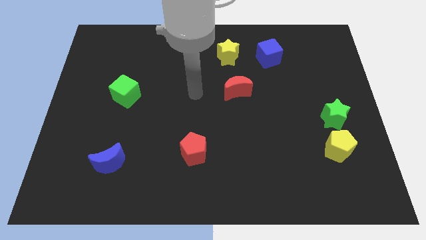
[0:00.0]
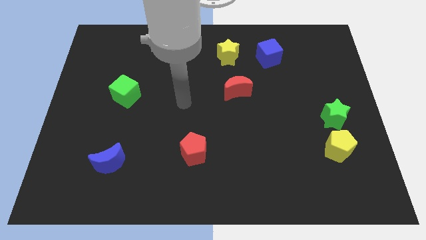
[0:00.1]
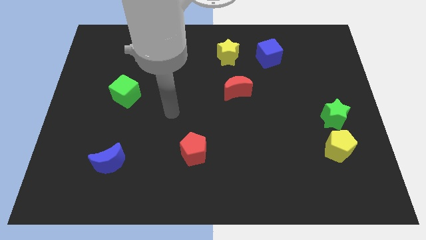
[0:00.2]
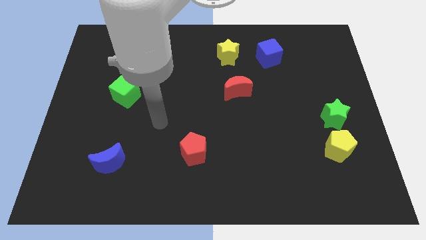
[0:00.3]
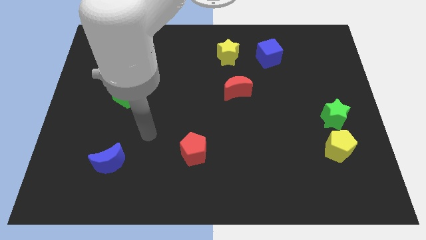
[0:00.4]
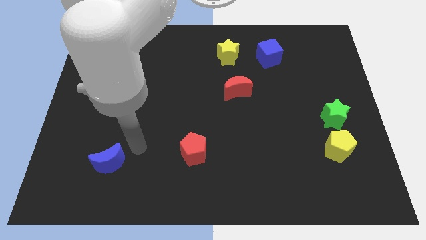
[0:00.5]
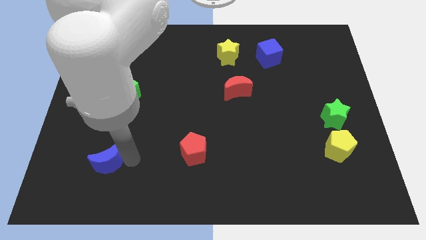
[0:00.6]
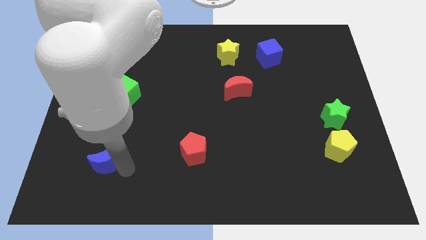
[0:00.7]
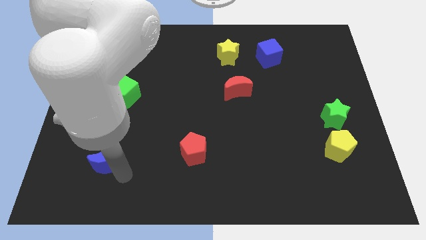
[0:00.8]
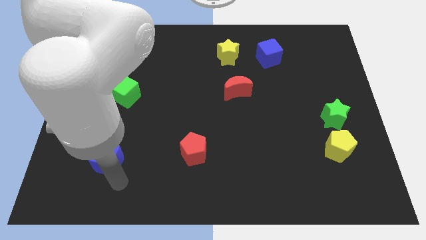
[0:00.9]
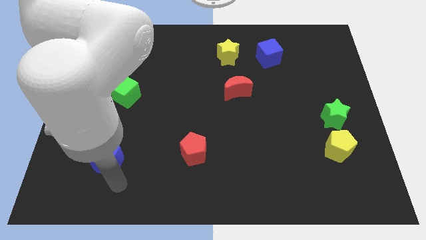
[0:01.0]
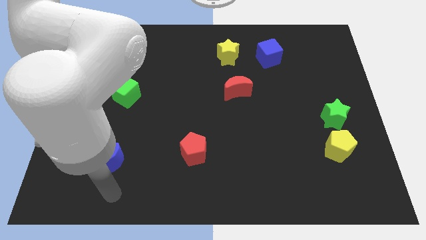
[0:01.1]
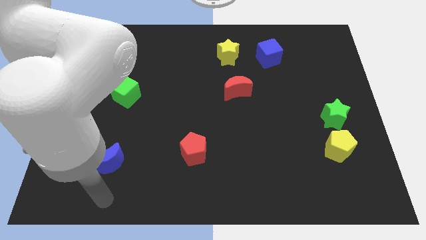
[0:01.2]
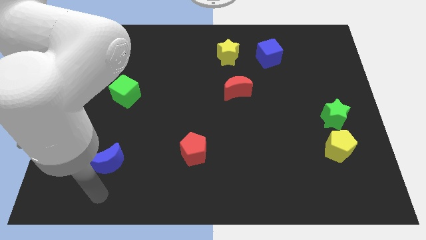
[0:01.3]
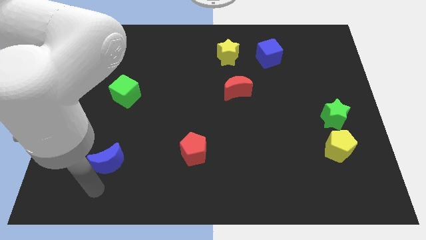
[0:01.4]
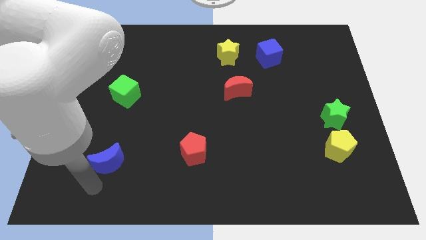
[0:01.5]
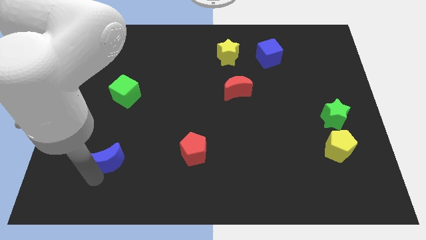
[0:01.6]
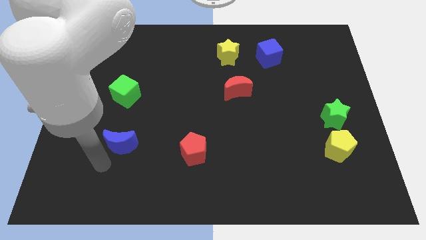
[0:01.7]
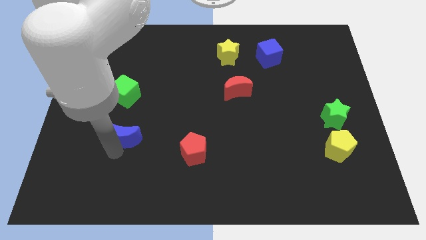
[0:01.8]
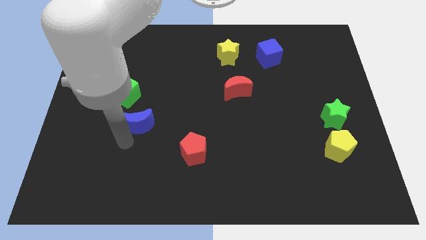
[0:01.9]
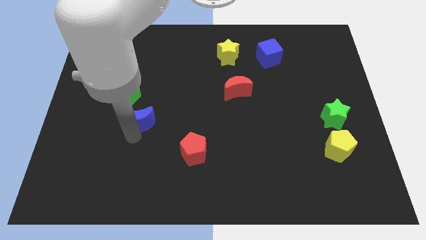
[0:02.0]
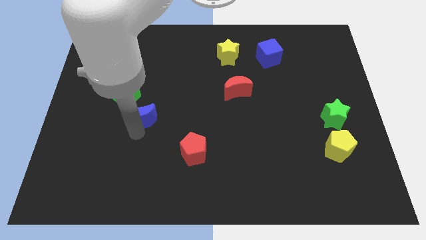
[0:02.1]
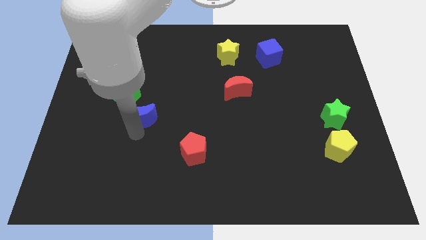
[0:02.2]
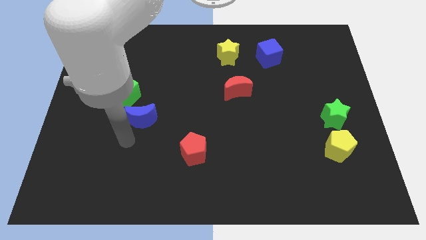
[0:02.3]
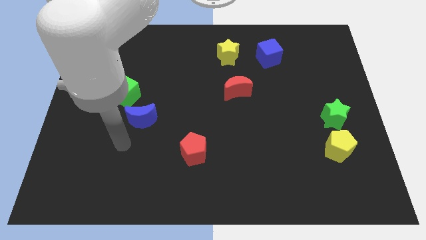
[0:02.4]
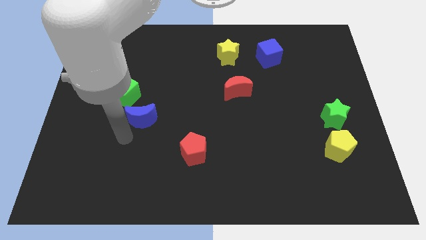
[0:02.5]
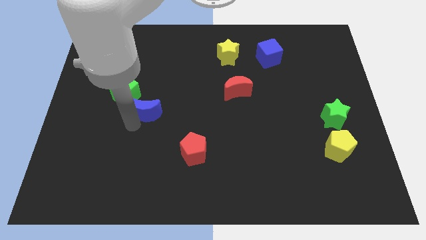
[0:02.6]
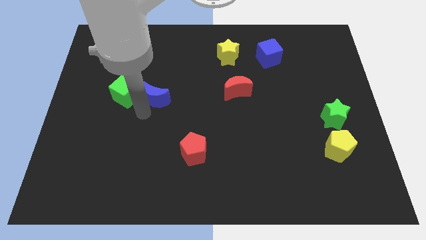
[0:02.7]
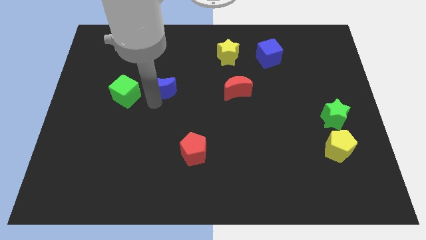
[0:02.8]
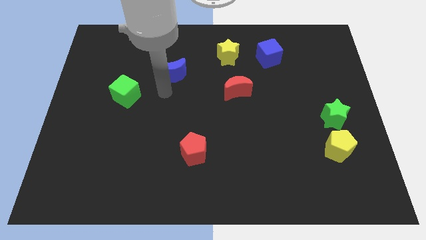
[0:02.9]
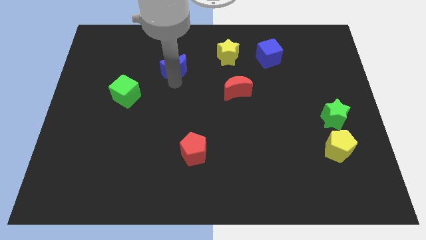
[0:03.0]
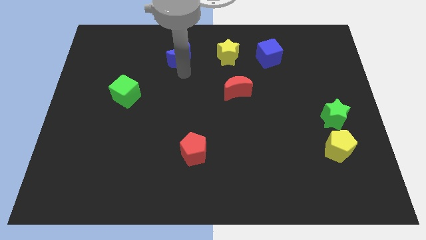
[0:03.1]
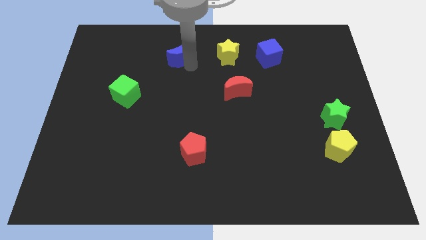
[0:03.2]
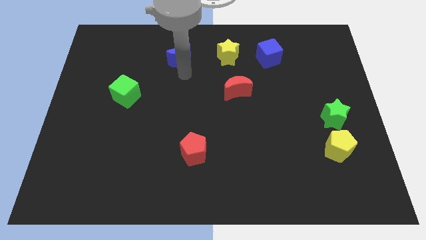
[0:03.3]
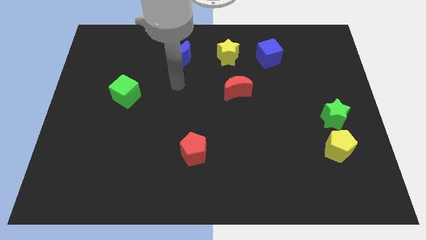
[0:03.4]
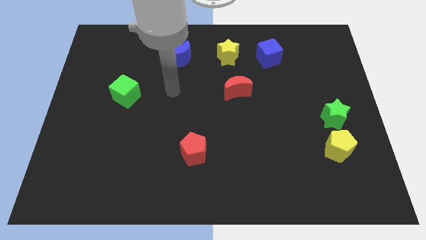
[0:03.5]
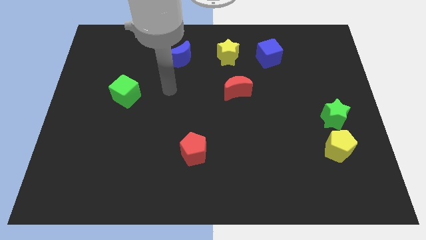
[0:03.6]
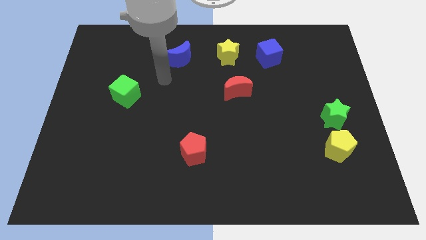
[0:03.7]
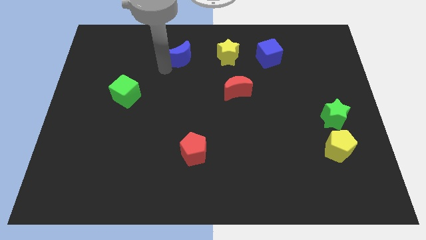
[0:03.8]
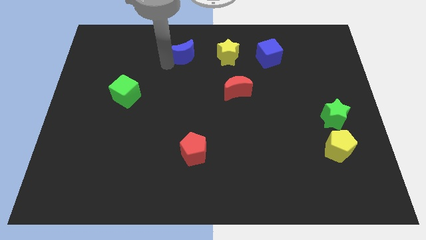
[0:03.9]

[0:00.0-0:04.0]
push the blue crescent parallel to the yellow star

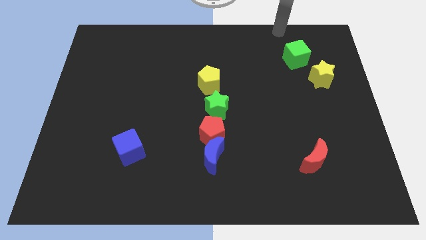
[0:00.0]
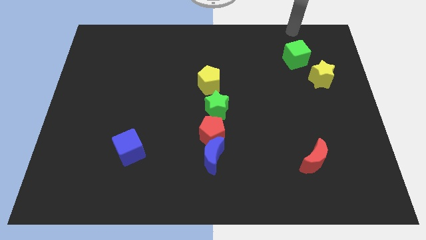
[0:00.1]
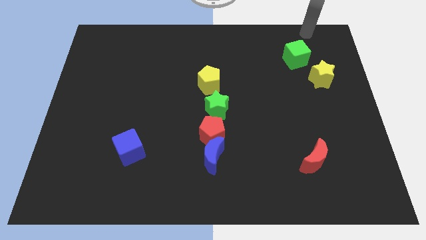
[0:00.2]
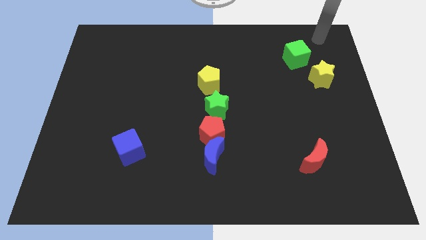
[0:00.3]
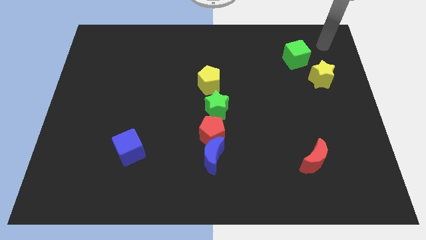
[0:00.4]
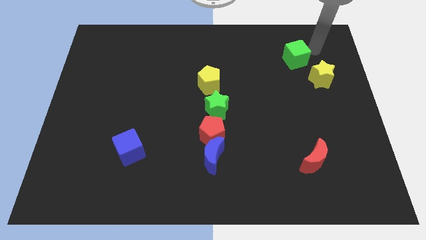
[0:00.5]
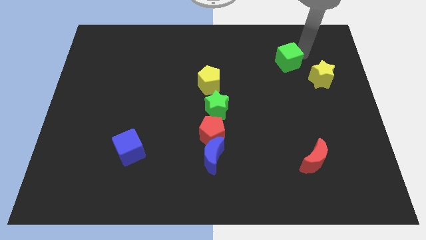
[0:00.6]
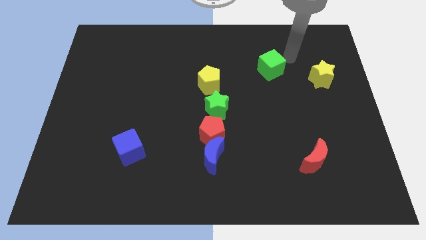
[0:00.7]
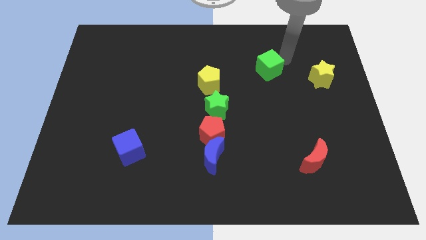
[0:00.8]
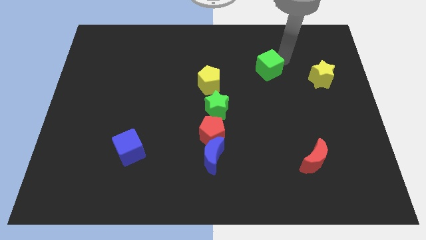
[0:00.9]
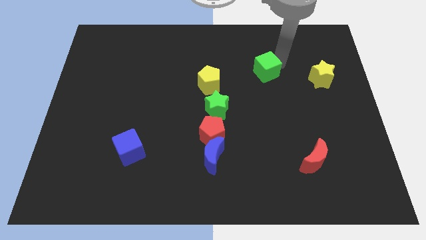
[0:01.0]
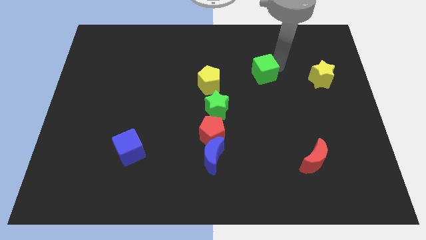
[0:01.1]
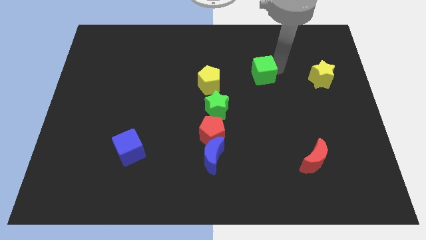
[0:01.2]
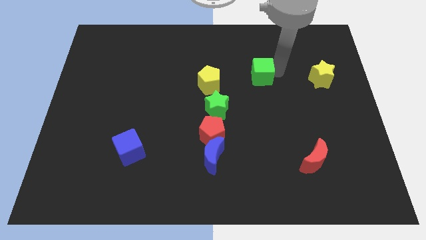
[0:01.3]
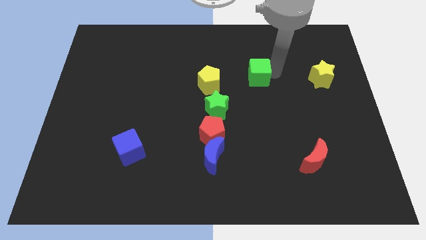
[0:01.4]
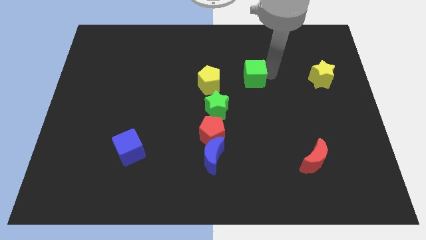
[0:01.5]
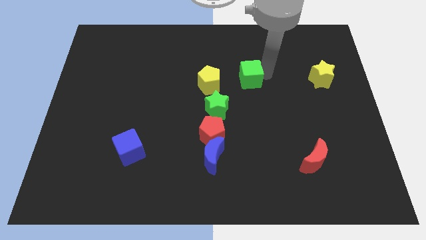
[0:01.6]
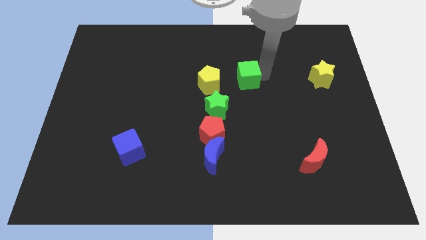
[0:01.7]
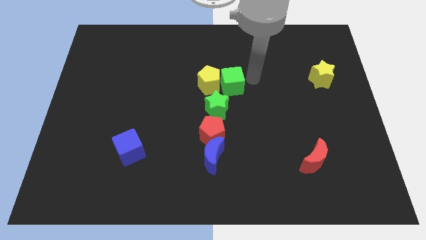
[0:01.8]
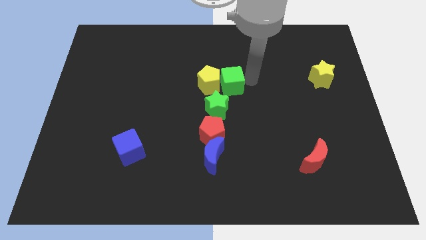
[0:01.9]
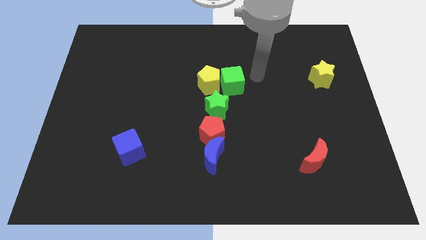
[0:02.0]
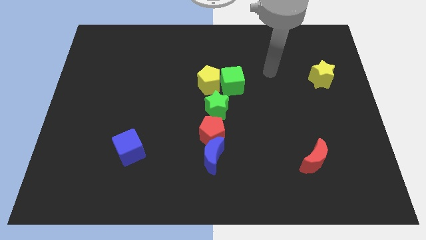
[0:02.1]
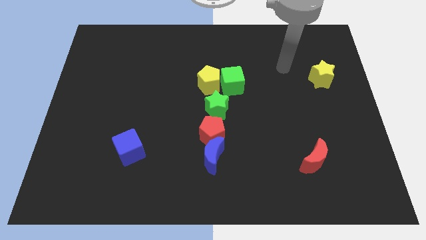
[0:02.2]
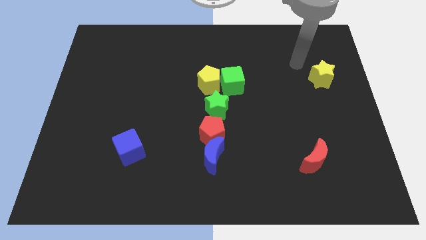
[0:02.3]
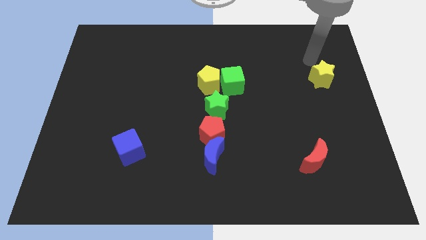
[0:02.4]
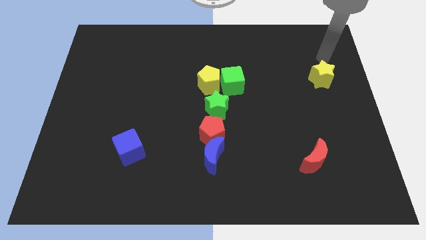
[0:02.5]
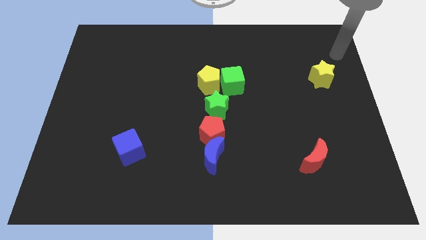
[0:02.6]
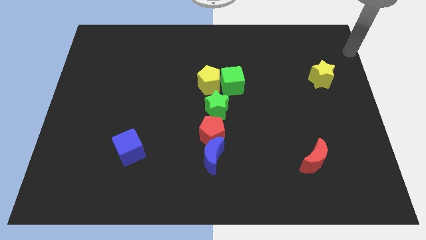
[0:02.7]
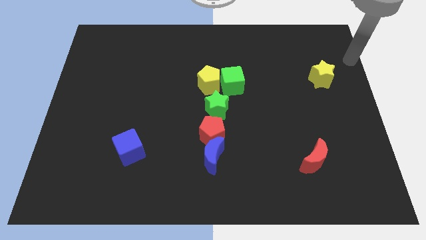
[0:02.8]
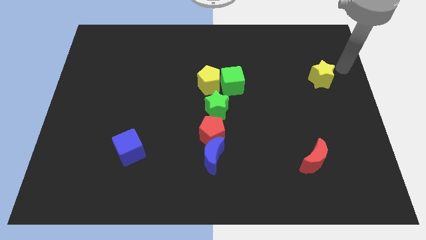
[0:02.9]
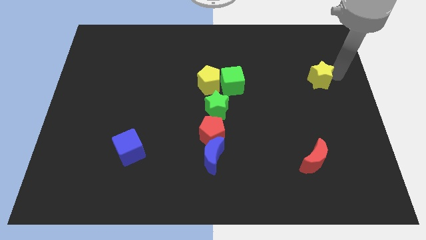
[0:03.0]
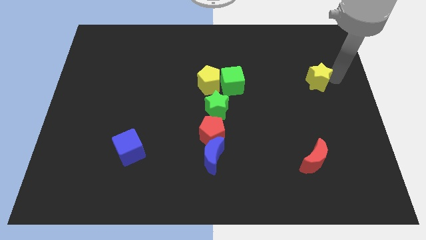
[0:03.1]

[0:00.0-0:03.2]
push green cube in to yellow pentagon

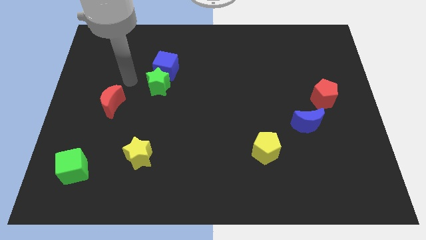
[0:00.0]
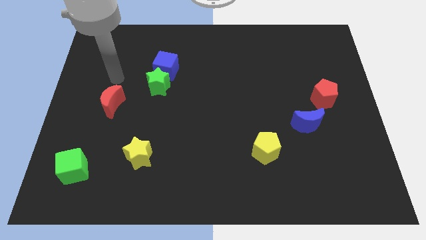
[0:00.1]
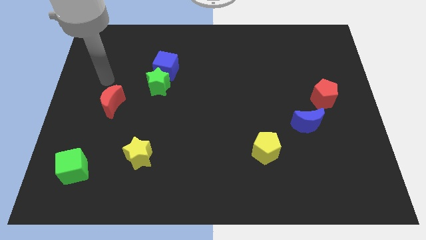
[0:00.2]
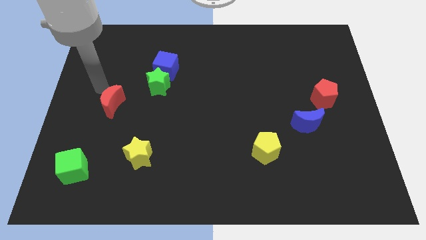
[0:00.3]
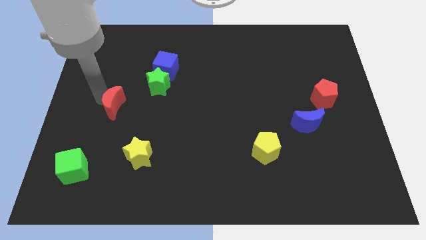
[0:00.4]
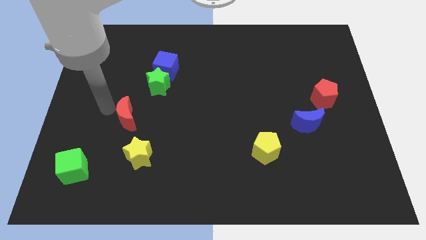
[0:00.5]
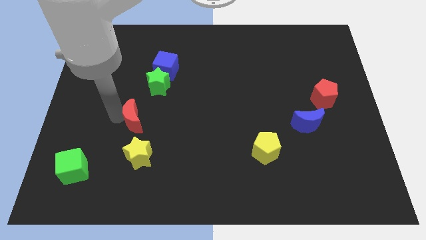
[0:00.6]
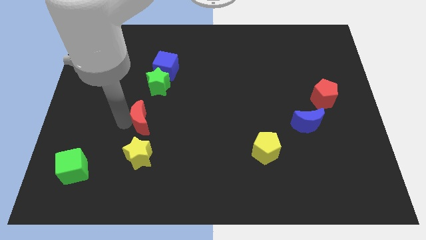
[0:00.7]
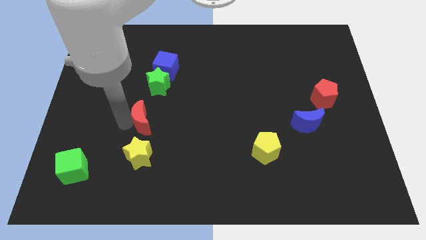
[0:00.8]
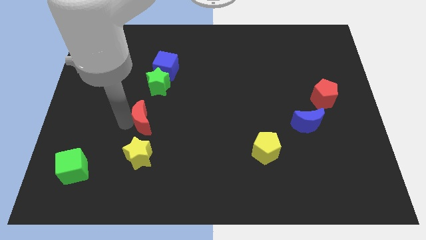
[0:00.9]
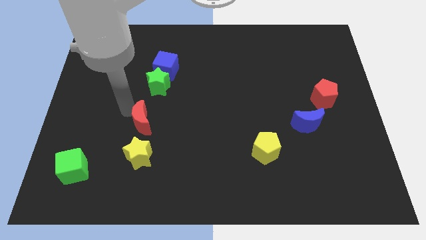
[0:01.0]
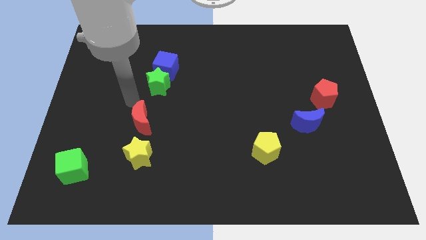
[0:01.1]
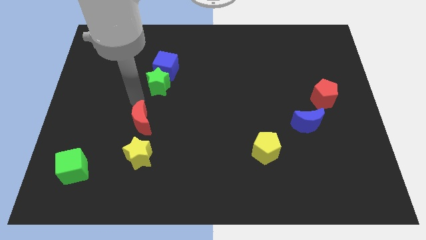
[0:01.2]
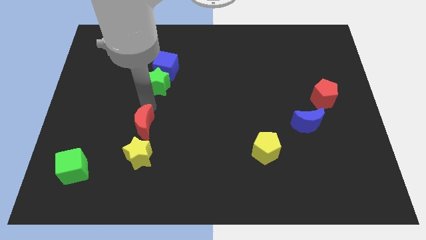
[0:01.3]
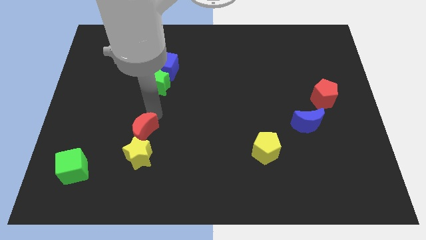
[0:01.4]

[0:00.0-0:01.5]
push the red moon on the top of the yellow star

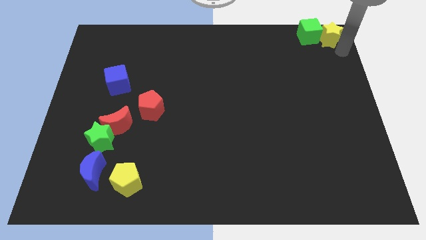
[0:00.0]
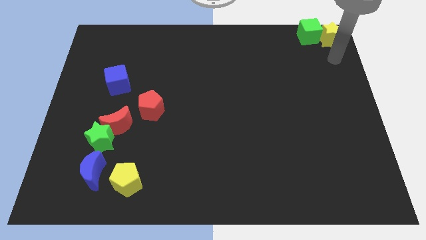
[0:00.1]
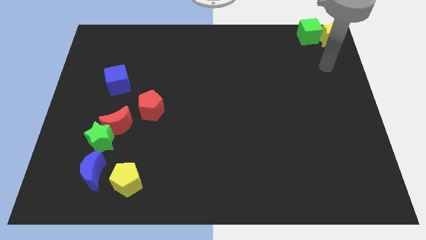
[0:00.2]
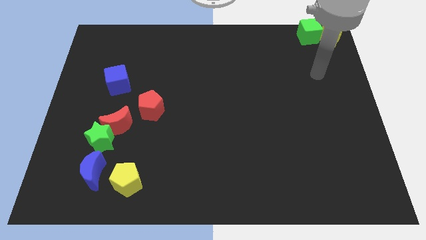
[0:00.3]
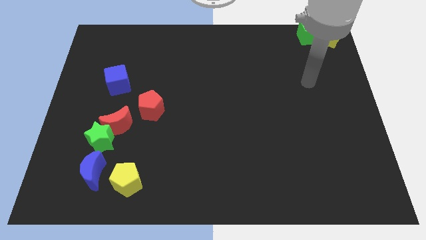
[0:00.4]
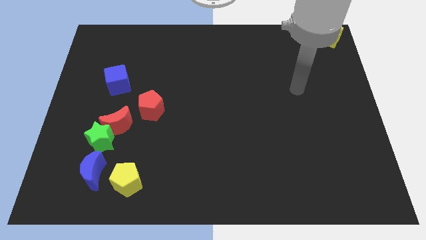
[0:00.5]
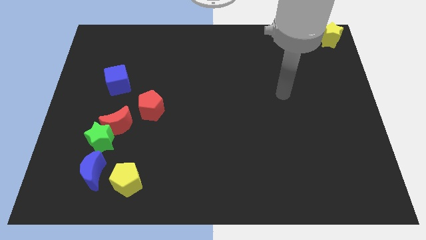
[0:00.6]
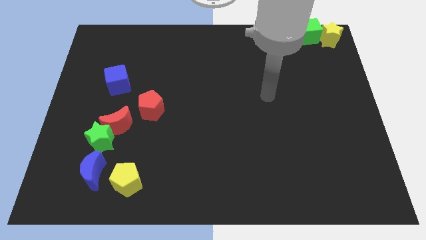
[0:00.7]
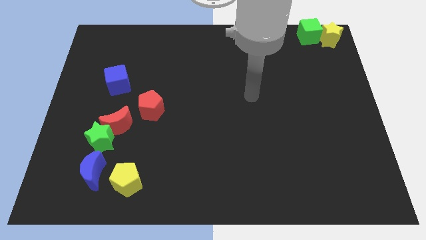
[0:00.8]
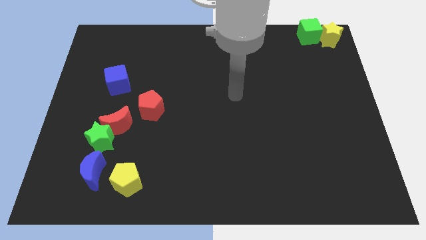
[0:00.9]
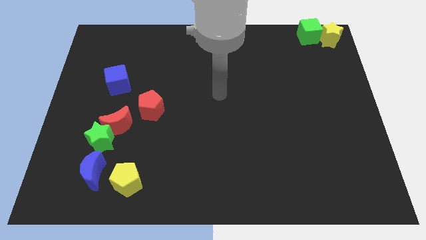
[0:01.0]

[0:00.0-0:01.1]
place your hand at the center of the board
